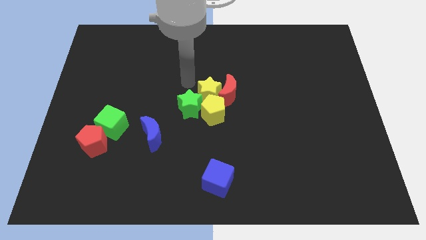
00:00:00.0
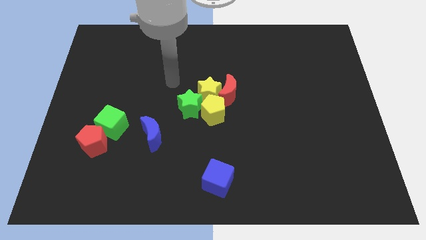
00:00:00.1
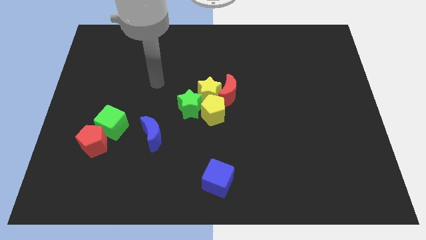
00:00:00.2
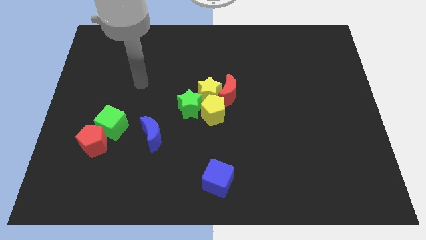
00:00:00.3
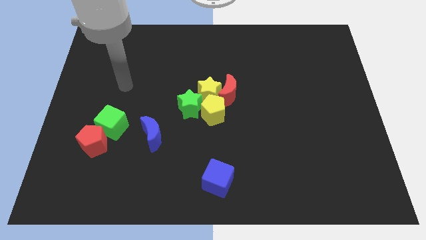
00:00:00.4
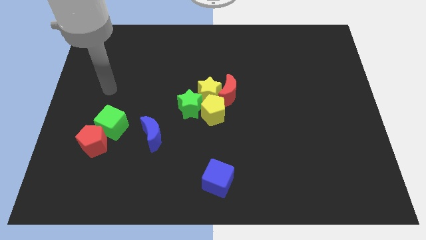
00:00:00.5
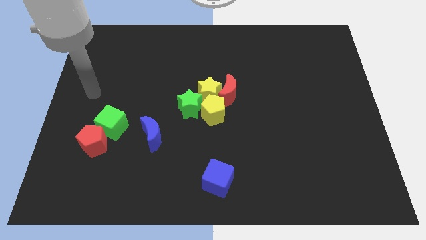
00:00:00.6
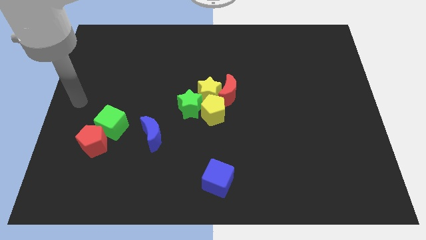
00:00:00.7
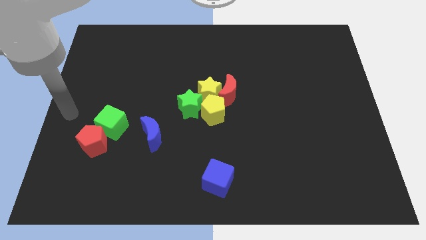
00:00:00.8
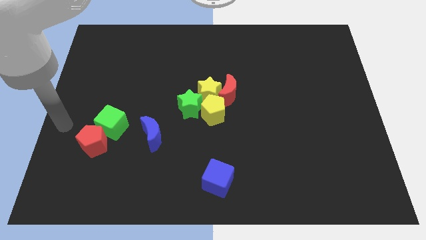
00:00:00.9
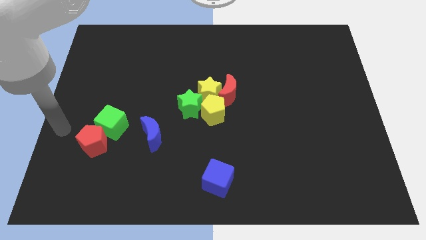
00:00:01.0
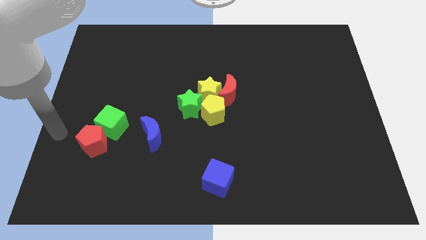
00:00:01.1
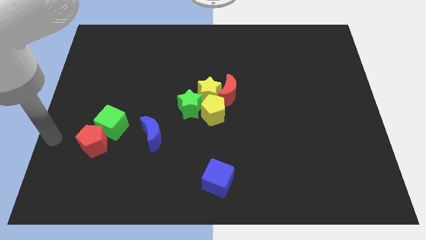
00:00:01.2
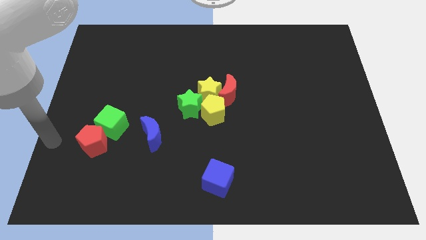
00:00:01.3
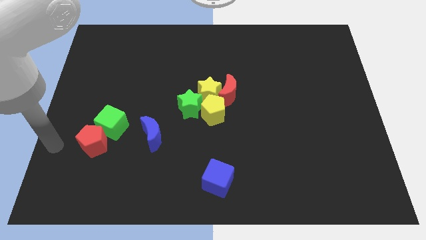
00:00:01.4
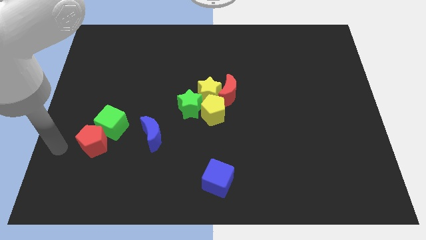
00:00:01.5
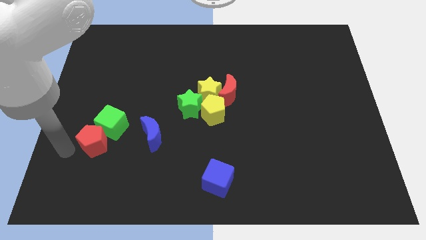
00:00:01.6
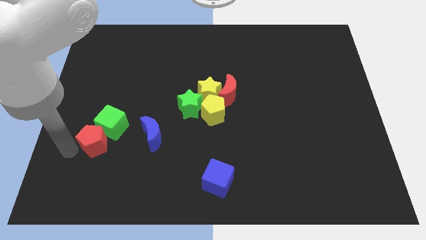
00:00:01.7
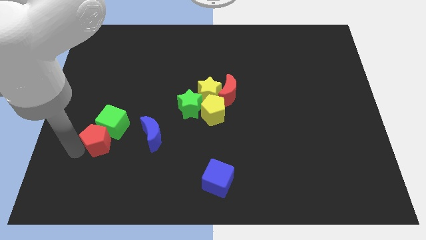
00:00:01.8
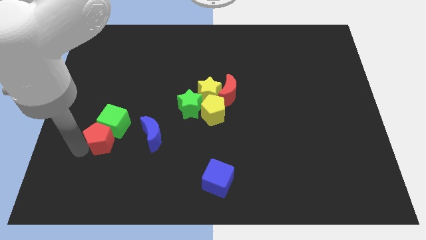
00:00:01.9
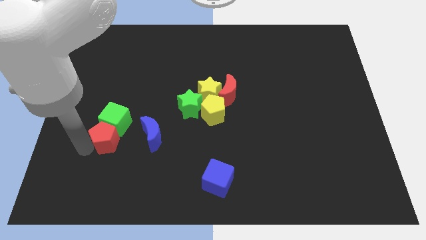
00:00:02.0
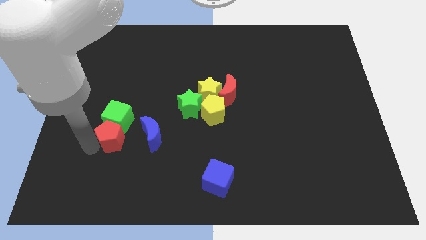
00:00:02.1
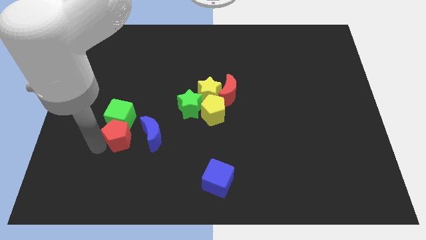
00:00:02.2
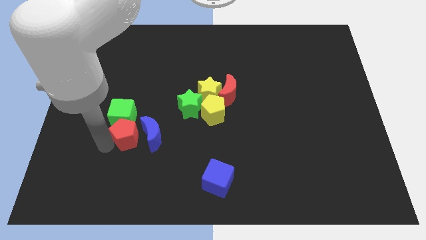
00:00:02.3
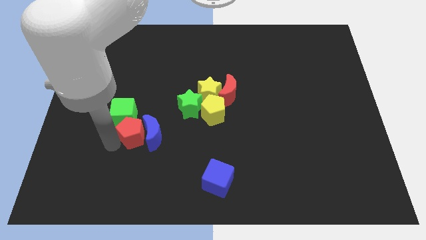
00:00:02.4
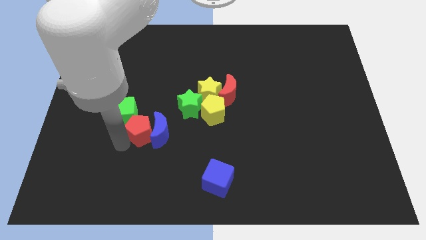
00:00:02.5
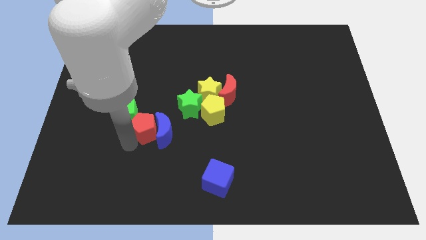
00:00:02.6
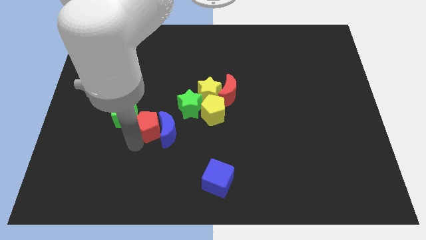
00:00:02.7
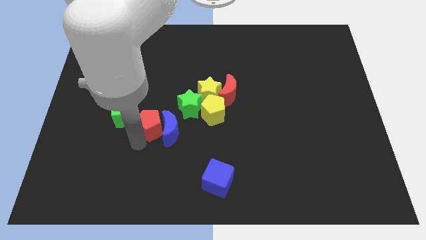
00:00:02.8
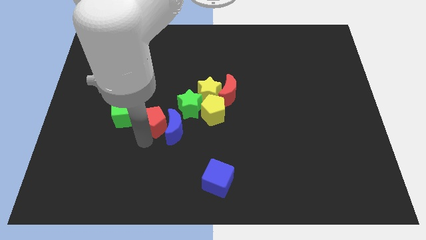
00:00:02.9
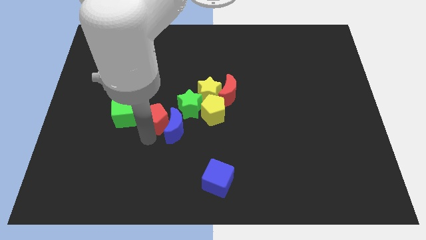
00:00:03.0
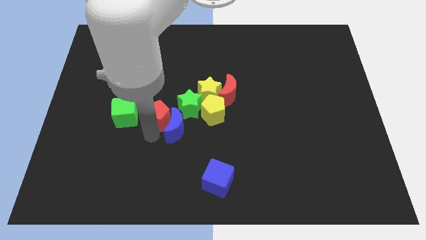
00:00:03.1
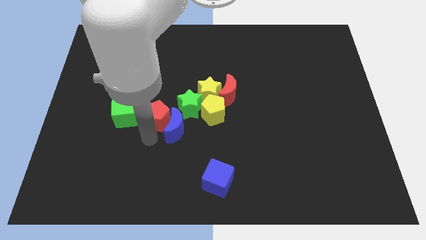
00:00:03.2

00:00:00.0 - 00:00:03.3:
push the red pentagon and blue crescent towards the group of blocks

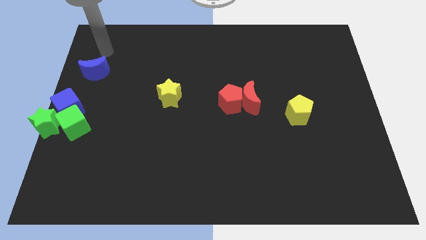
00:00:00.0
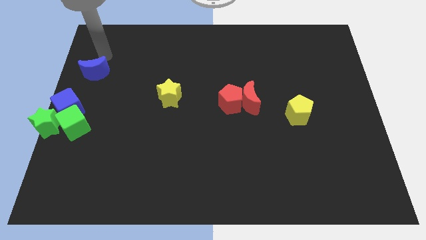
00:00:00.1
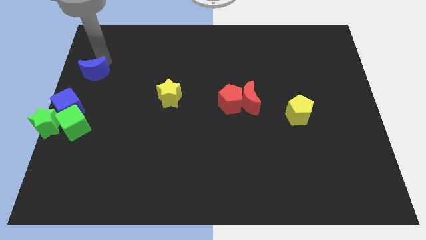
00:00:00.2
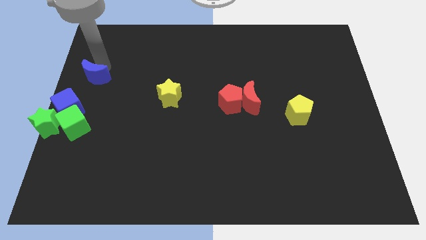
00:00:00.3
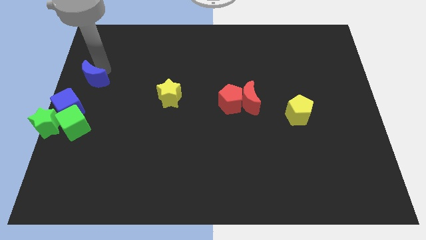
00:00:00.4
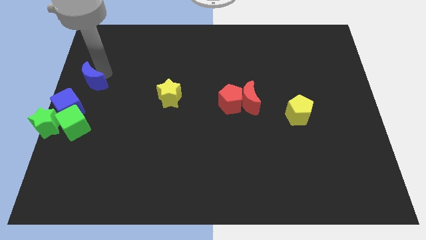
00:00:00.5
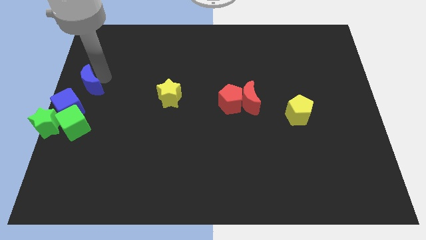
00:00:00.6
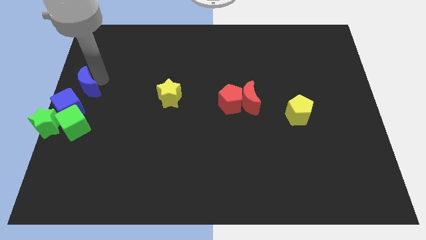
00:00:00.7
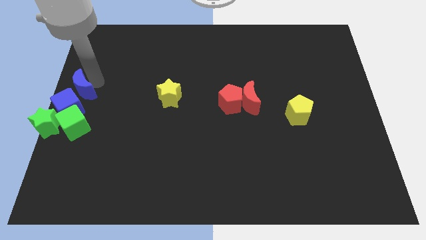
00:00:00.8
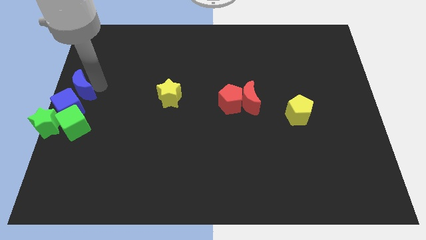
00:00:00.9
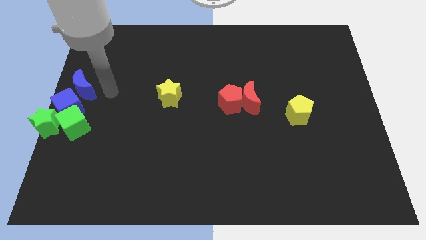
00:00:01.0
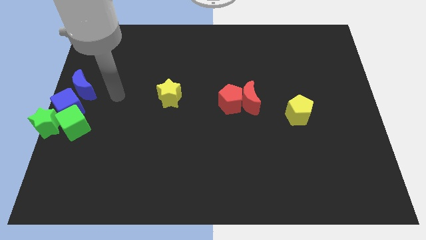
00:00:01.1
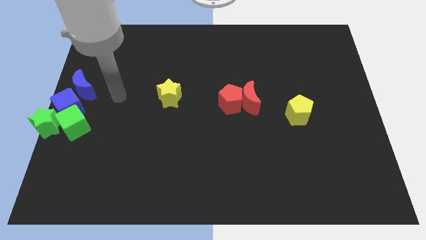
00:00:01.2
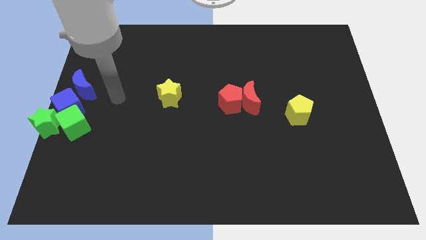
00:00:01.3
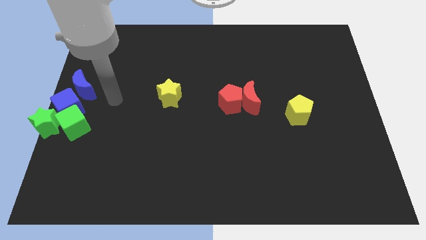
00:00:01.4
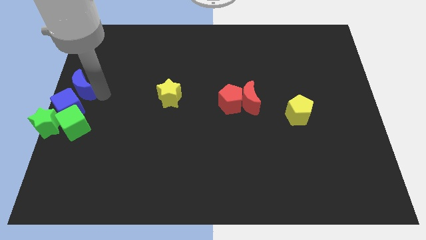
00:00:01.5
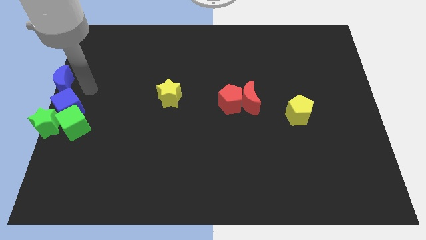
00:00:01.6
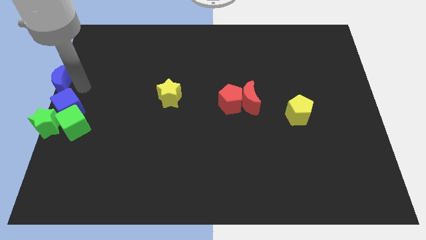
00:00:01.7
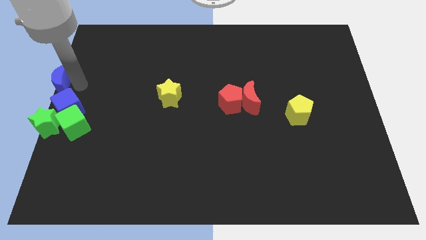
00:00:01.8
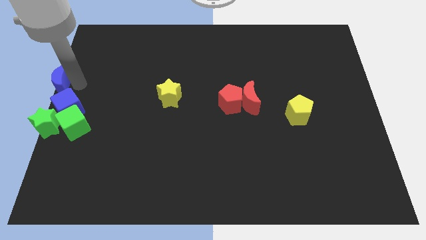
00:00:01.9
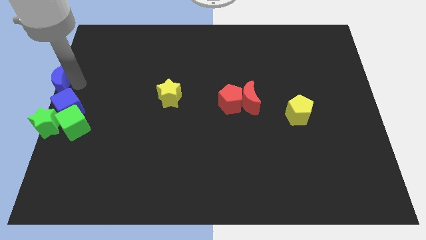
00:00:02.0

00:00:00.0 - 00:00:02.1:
put the blue moon above the blue cube

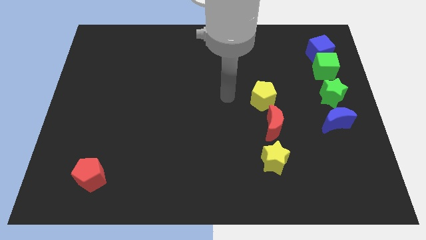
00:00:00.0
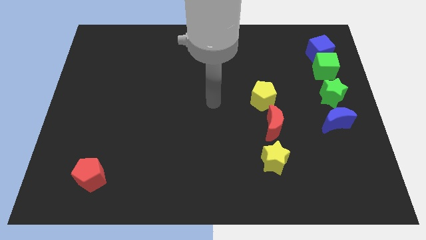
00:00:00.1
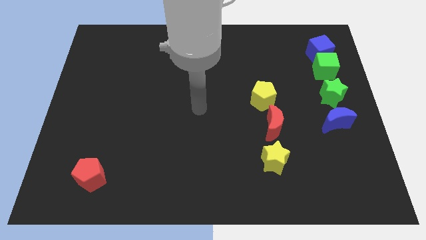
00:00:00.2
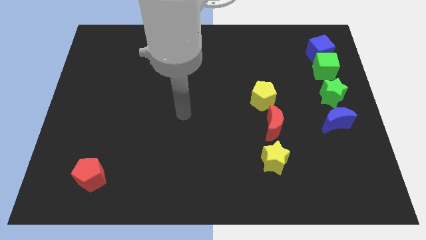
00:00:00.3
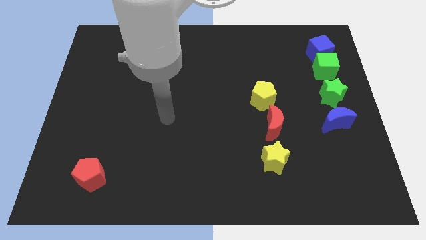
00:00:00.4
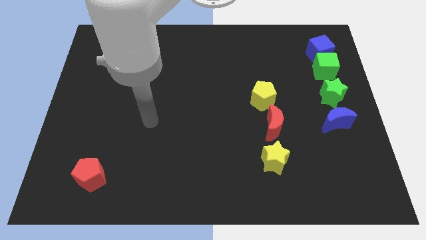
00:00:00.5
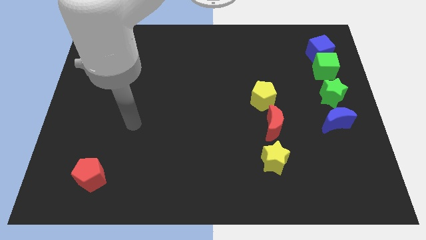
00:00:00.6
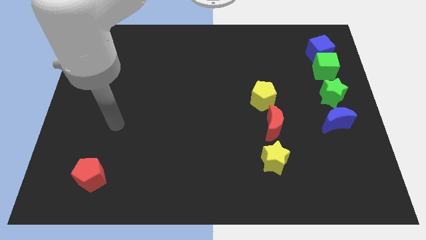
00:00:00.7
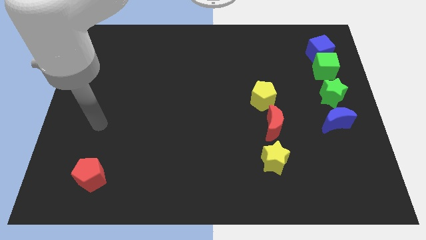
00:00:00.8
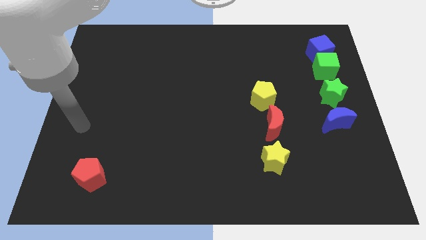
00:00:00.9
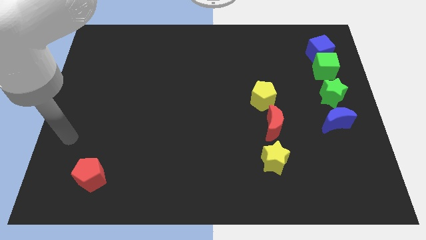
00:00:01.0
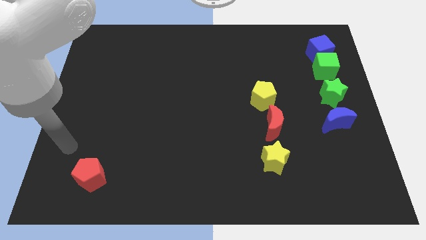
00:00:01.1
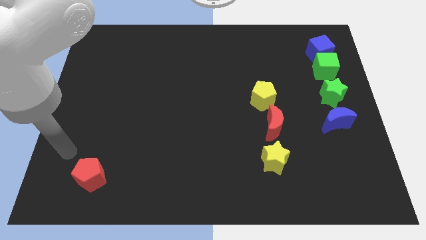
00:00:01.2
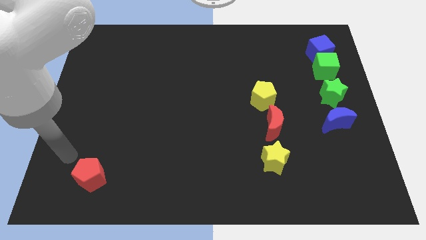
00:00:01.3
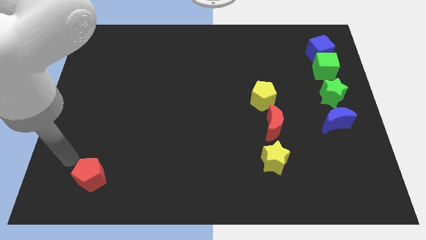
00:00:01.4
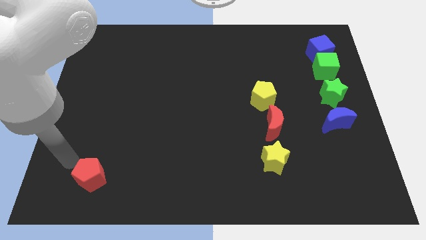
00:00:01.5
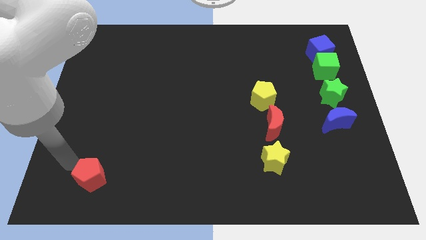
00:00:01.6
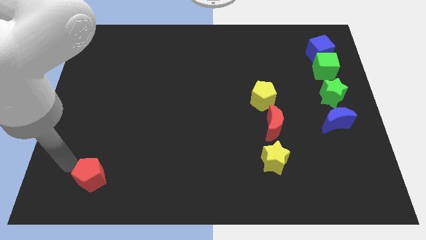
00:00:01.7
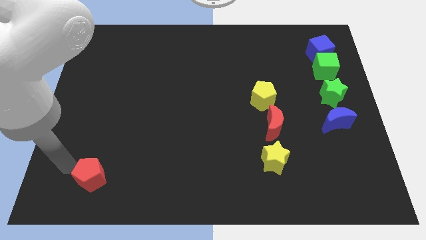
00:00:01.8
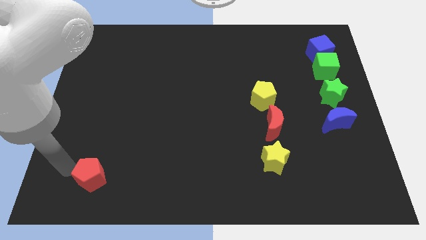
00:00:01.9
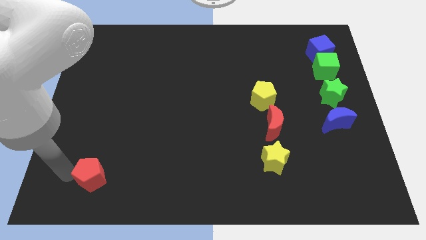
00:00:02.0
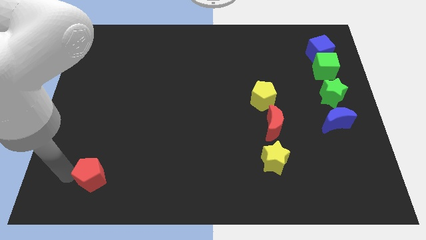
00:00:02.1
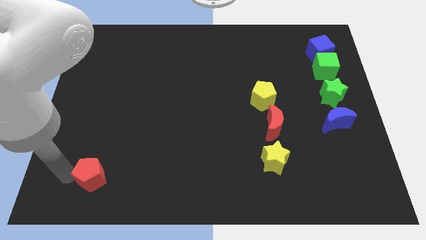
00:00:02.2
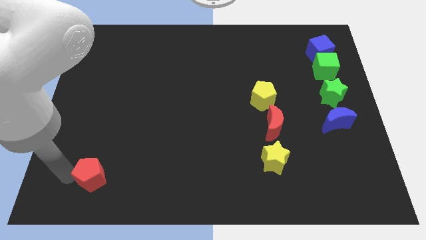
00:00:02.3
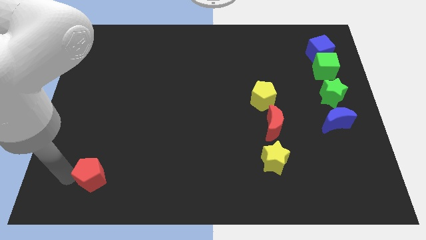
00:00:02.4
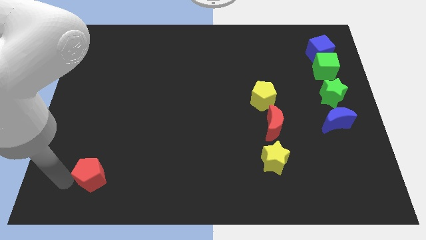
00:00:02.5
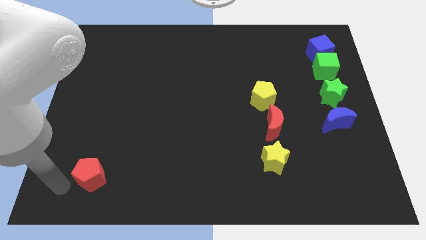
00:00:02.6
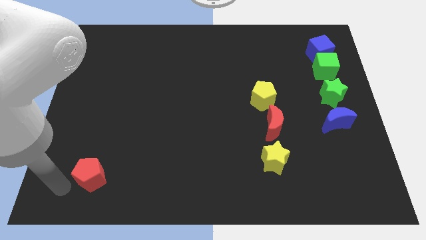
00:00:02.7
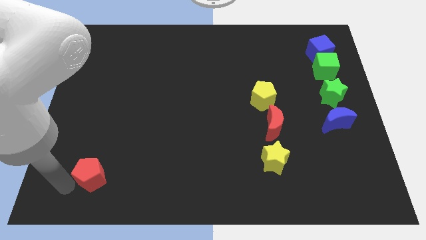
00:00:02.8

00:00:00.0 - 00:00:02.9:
place your arm left to red pentagon

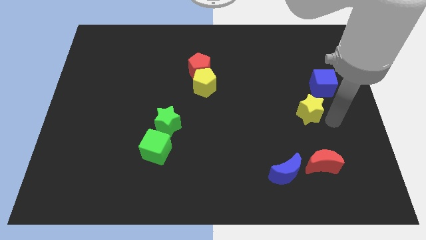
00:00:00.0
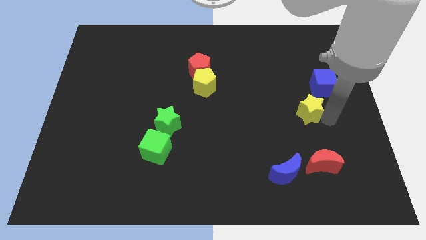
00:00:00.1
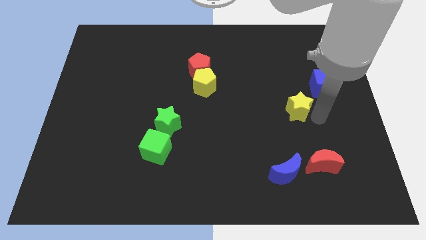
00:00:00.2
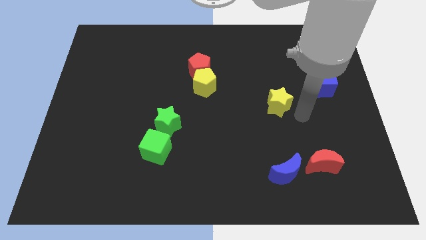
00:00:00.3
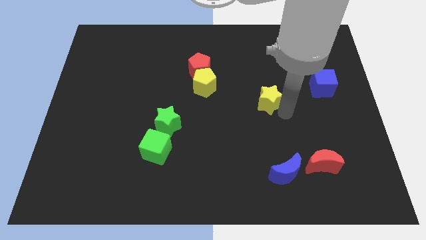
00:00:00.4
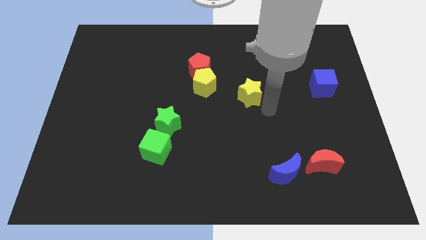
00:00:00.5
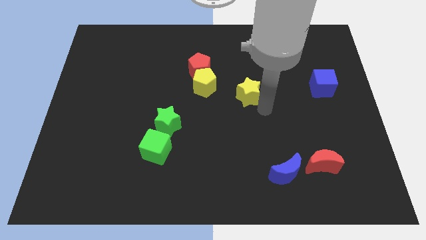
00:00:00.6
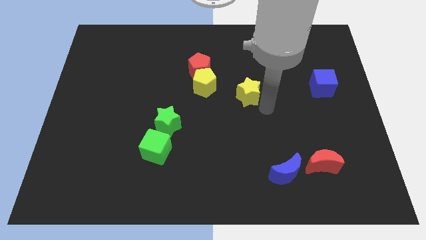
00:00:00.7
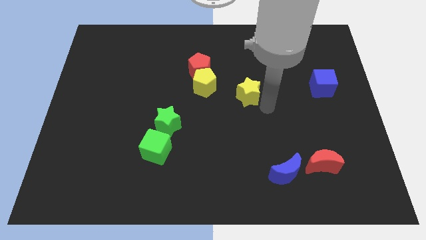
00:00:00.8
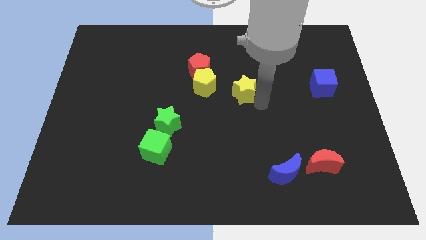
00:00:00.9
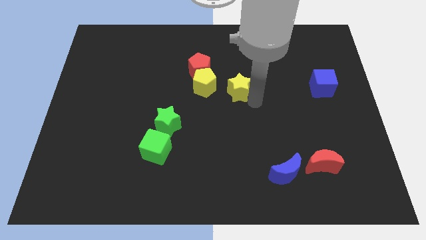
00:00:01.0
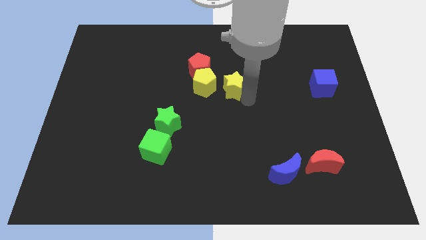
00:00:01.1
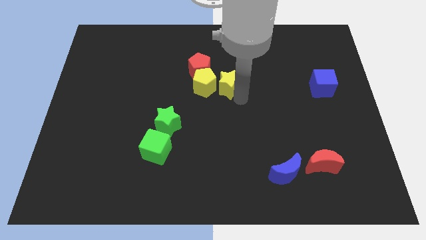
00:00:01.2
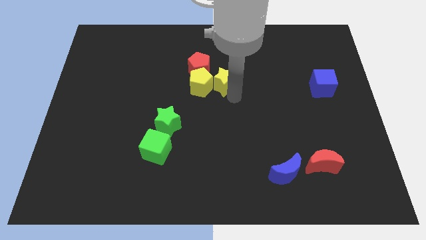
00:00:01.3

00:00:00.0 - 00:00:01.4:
push the yellow star right to the yellow pentagon
